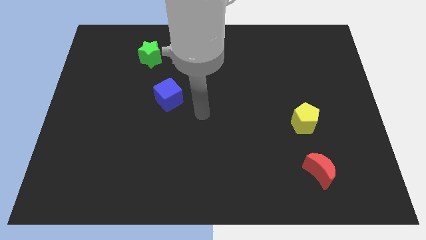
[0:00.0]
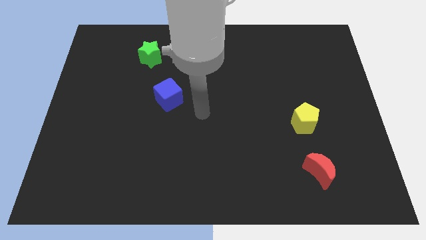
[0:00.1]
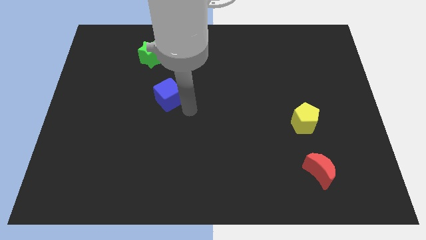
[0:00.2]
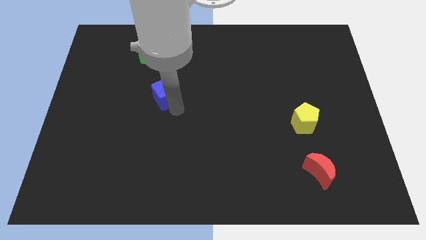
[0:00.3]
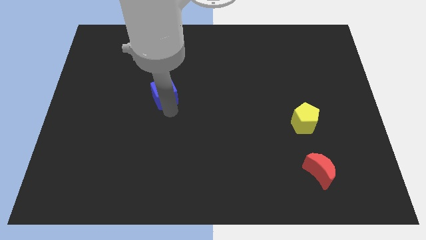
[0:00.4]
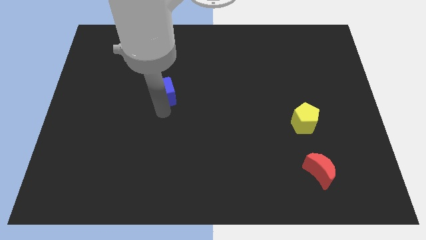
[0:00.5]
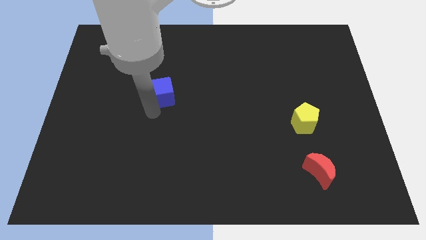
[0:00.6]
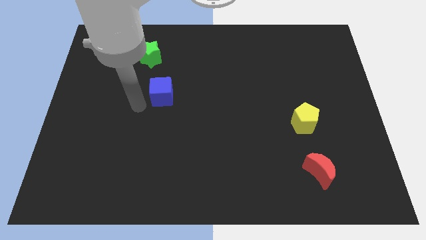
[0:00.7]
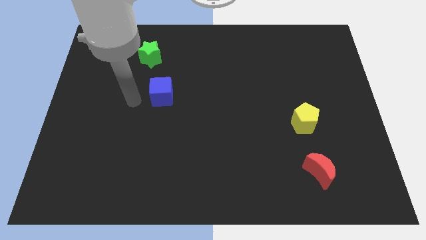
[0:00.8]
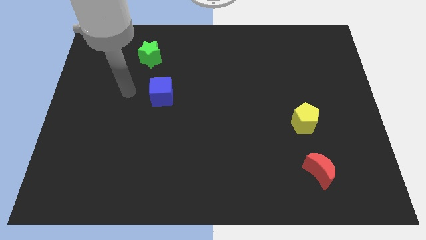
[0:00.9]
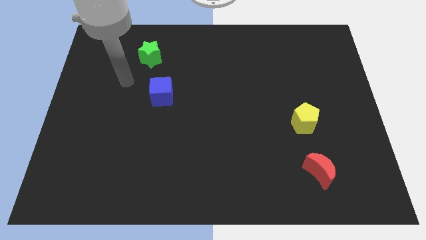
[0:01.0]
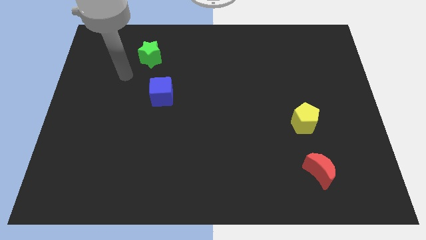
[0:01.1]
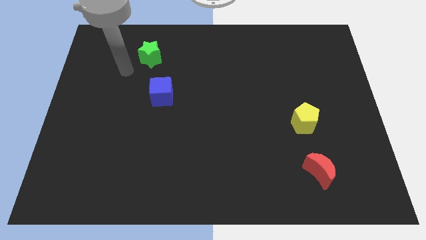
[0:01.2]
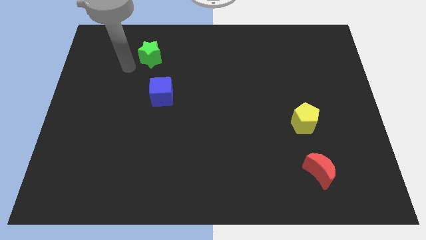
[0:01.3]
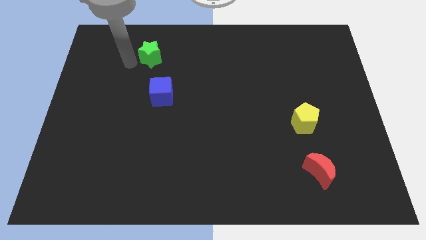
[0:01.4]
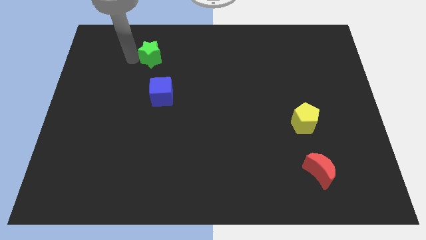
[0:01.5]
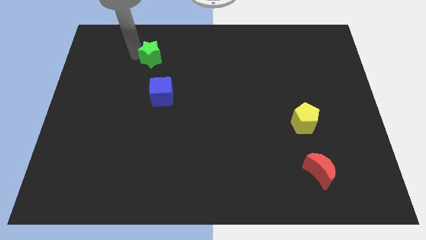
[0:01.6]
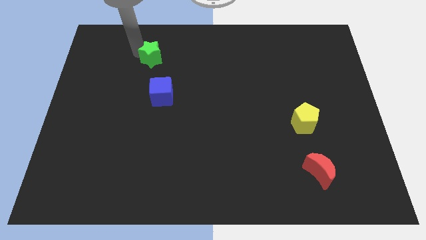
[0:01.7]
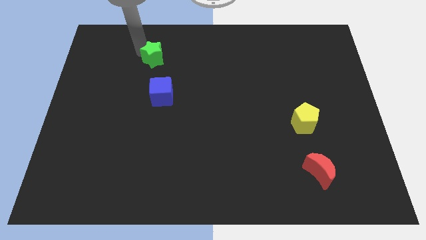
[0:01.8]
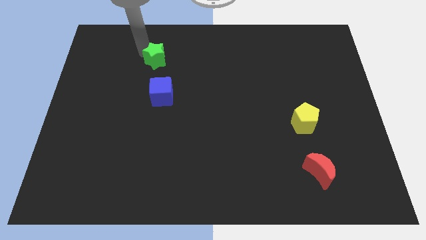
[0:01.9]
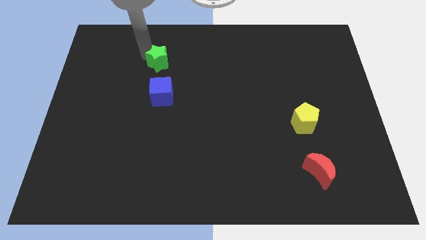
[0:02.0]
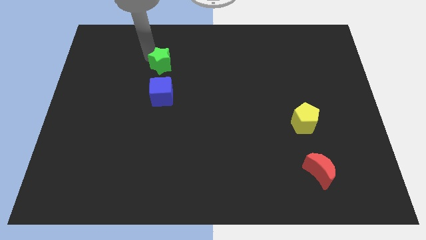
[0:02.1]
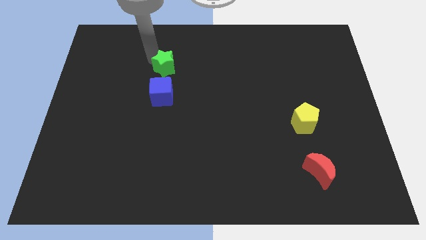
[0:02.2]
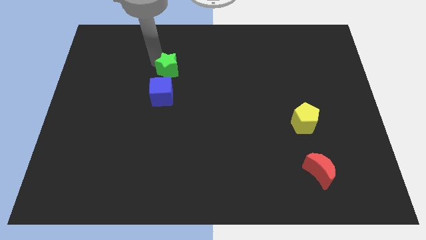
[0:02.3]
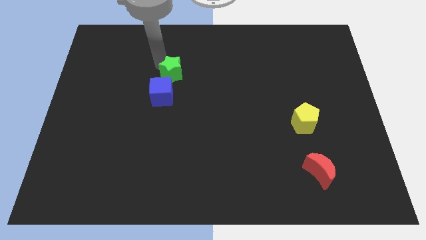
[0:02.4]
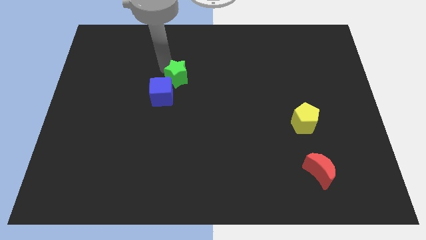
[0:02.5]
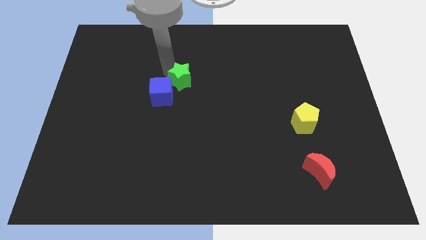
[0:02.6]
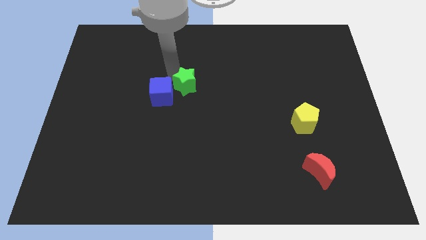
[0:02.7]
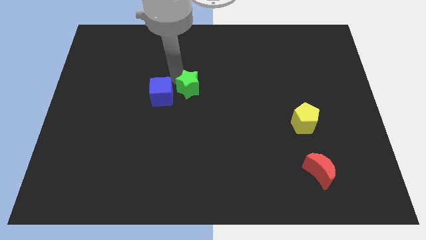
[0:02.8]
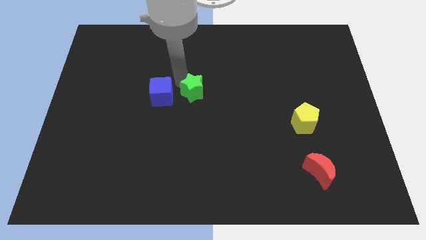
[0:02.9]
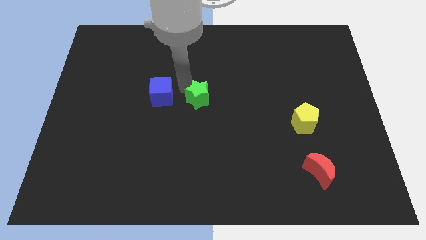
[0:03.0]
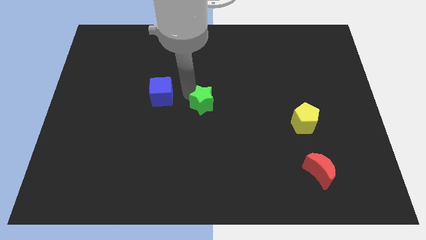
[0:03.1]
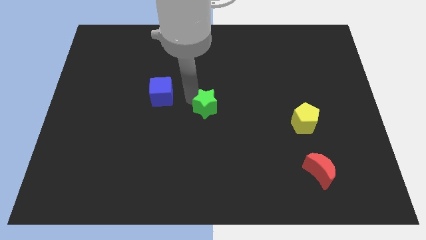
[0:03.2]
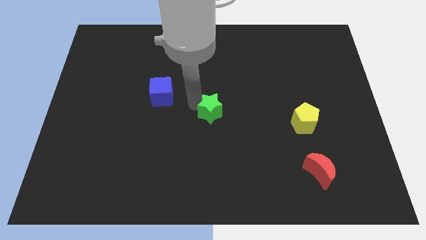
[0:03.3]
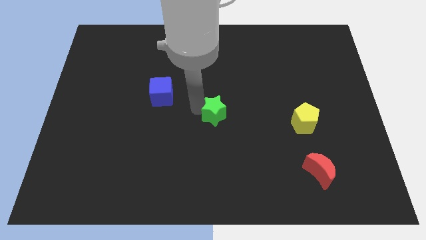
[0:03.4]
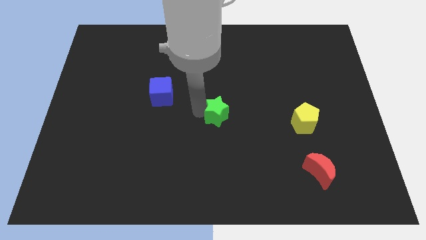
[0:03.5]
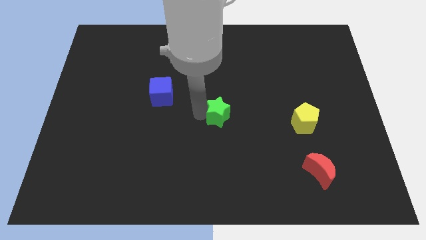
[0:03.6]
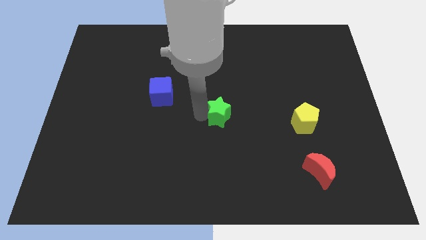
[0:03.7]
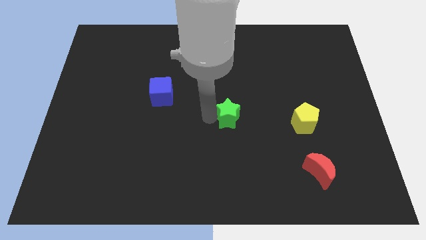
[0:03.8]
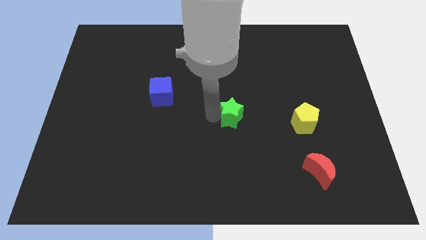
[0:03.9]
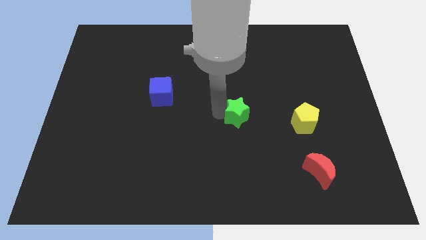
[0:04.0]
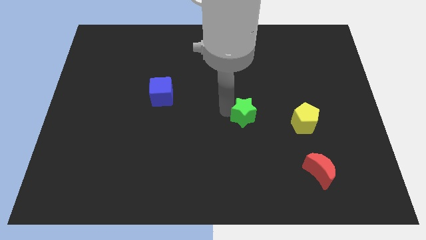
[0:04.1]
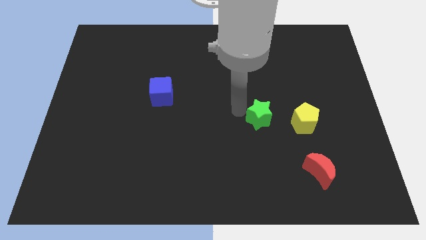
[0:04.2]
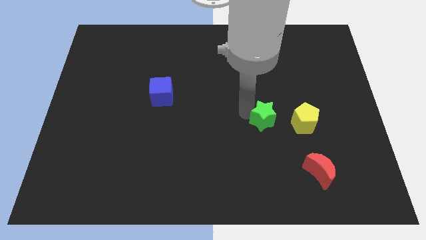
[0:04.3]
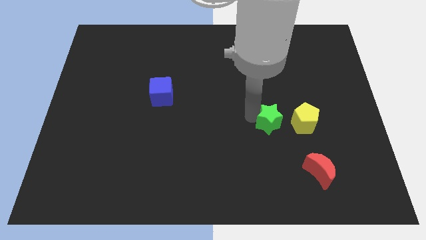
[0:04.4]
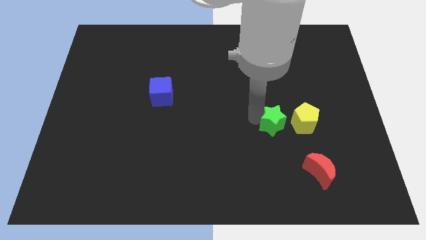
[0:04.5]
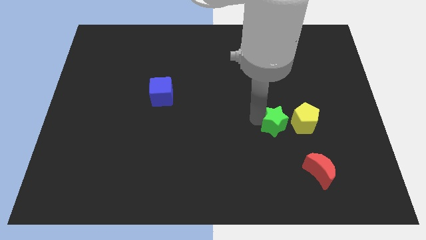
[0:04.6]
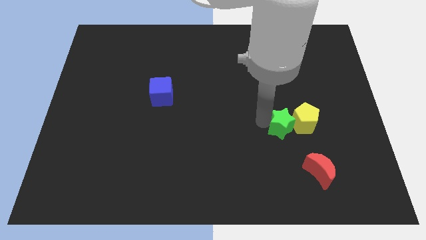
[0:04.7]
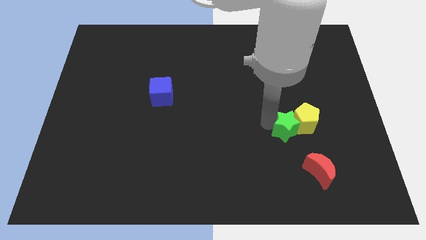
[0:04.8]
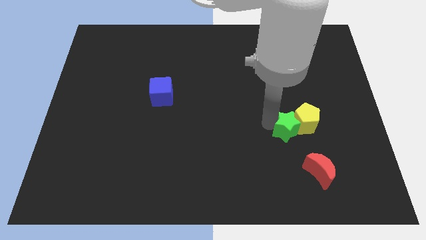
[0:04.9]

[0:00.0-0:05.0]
put the star to the yellow block

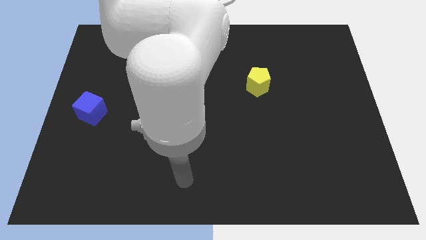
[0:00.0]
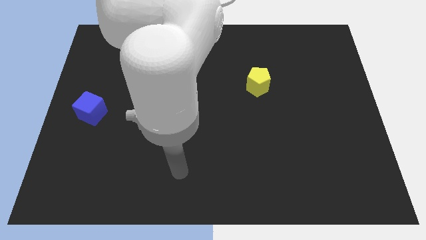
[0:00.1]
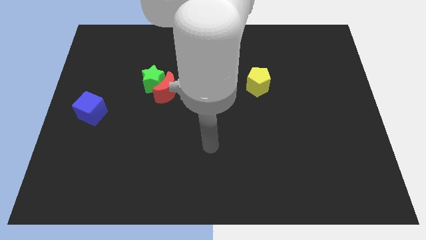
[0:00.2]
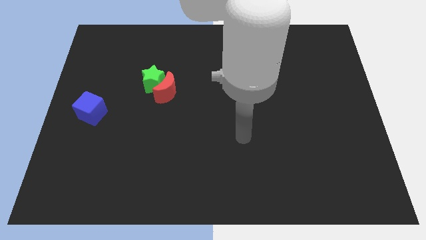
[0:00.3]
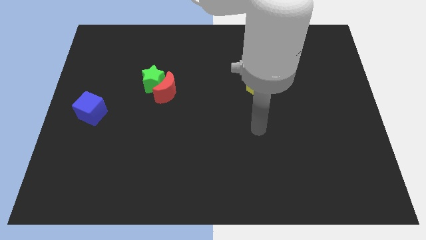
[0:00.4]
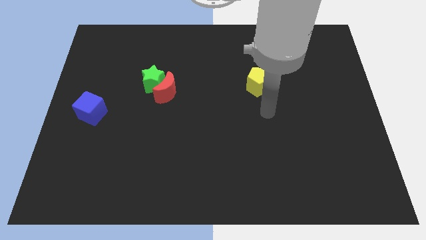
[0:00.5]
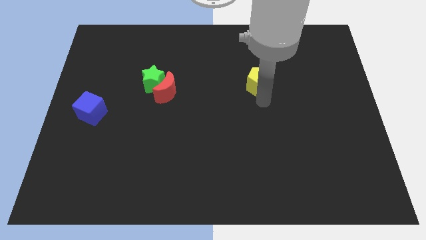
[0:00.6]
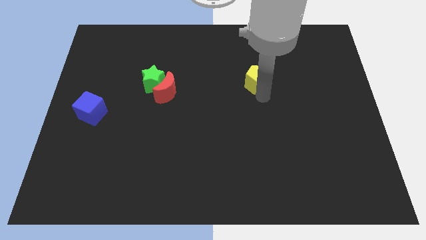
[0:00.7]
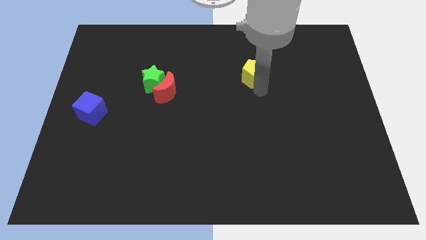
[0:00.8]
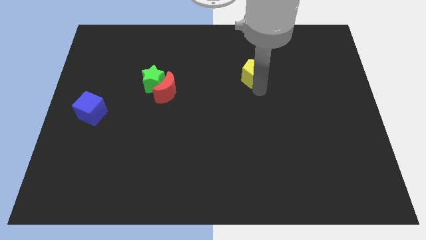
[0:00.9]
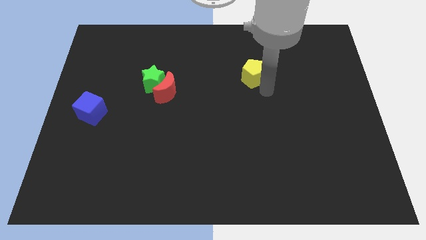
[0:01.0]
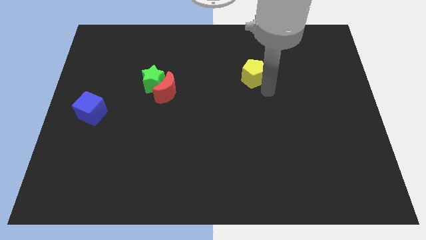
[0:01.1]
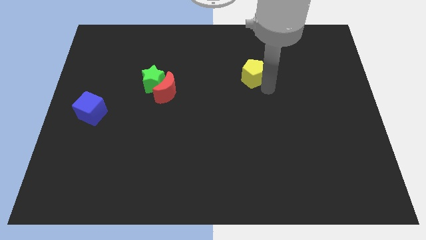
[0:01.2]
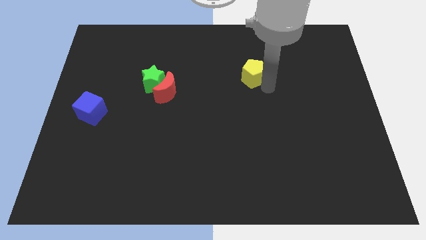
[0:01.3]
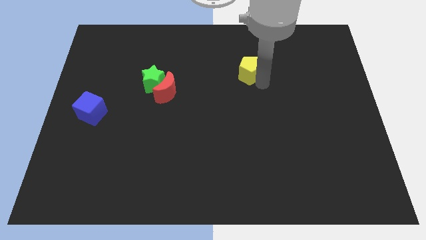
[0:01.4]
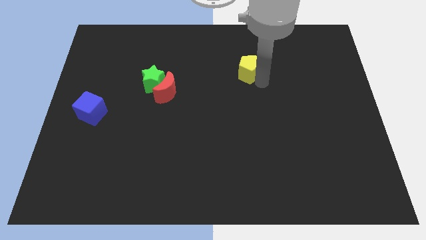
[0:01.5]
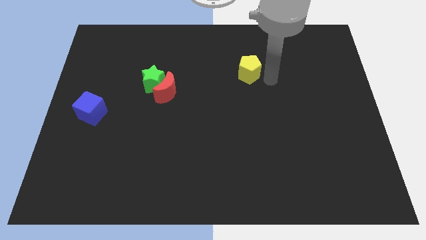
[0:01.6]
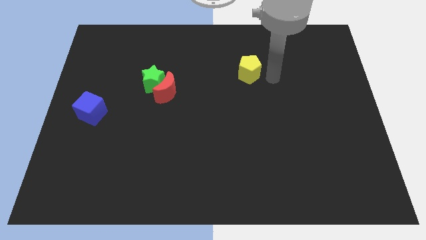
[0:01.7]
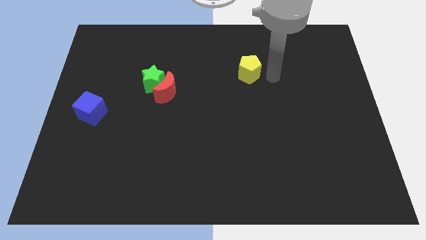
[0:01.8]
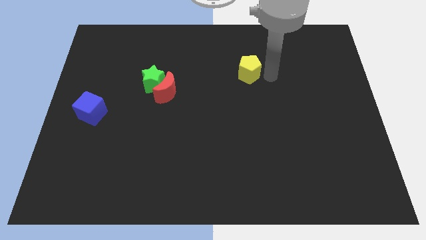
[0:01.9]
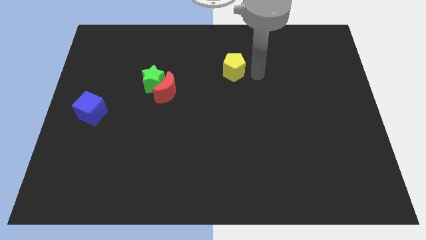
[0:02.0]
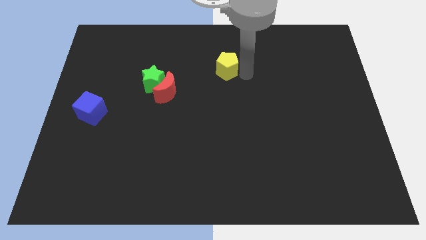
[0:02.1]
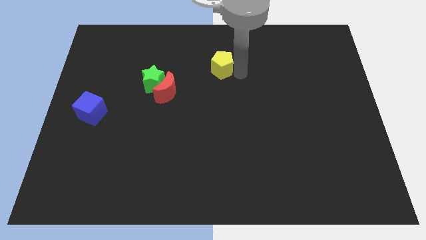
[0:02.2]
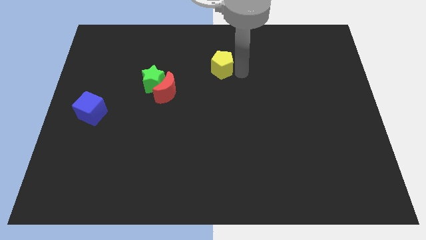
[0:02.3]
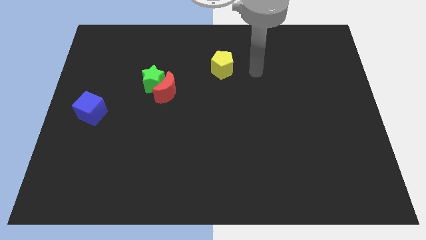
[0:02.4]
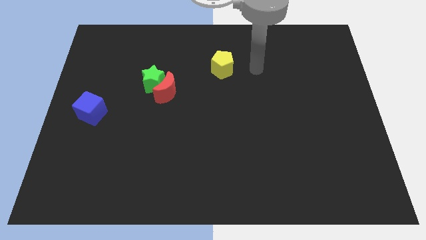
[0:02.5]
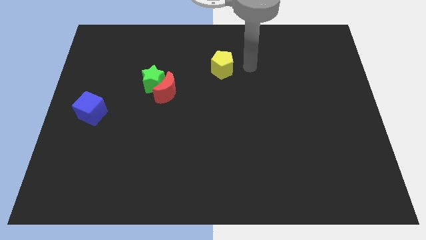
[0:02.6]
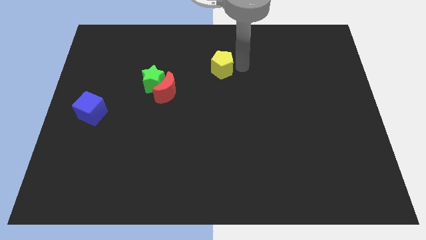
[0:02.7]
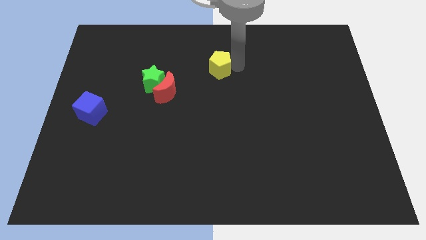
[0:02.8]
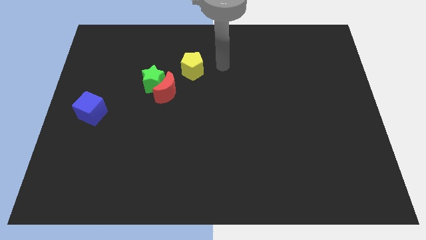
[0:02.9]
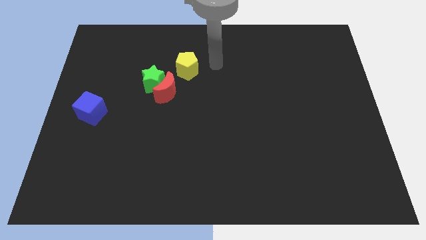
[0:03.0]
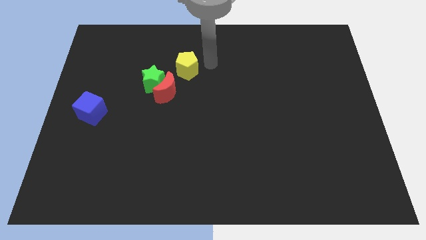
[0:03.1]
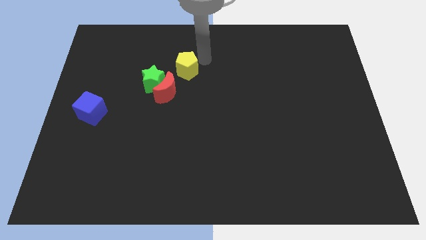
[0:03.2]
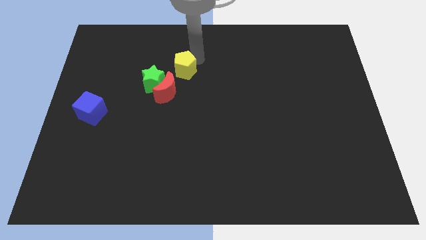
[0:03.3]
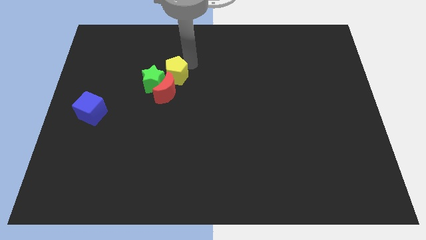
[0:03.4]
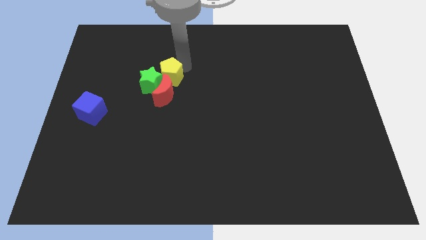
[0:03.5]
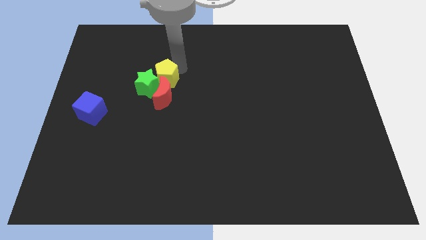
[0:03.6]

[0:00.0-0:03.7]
move the pentagon to the star
